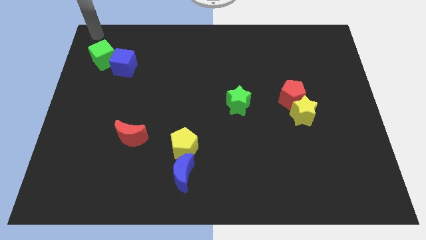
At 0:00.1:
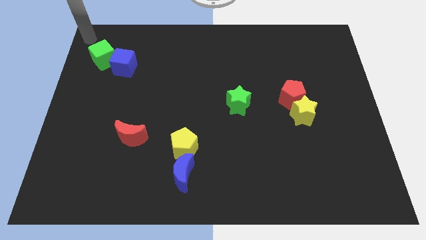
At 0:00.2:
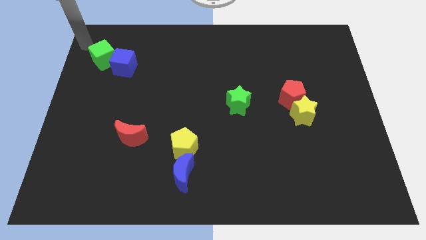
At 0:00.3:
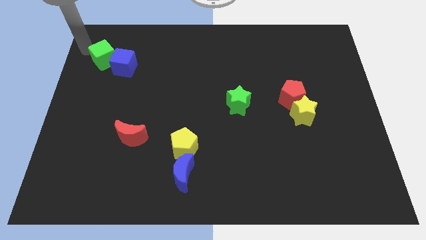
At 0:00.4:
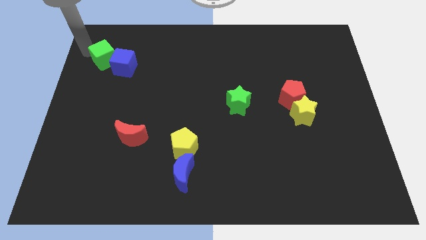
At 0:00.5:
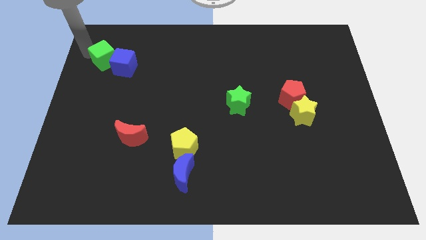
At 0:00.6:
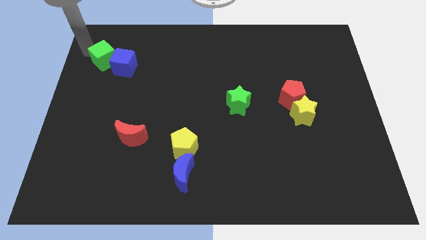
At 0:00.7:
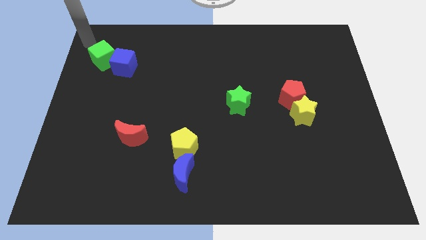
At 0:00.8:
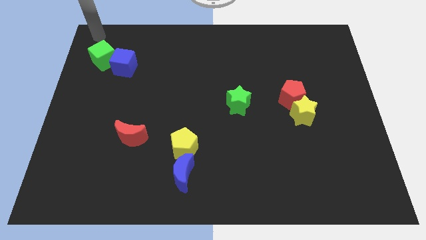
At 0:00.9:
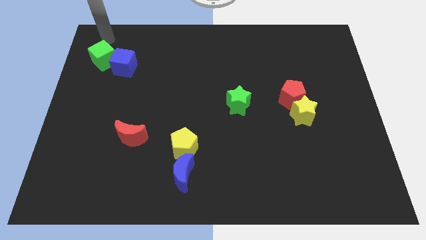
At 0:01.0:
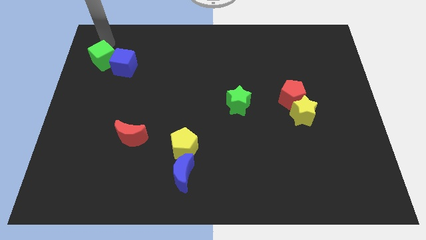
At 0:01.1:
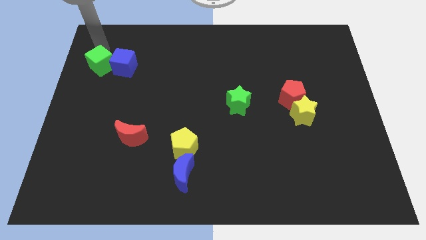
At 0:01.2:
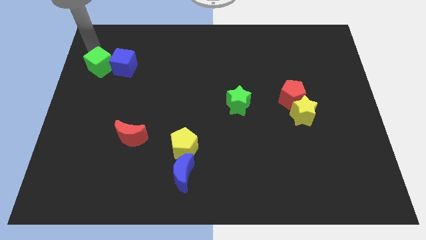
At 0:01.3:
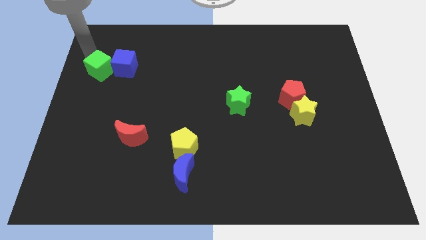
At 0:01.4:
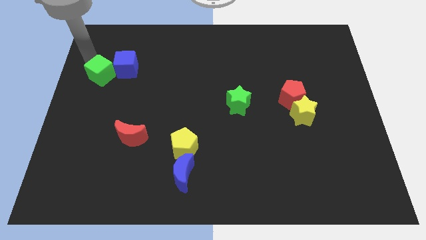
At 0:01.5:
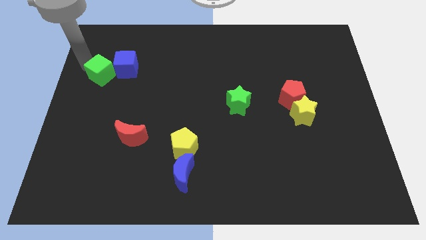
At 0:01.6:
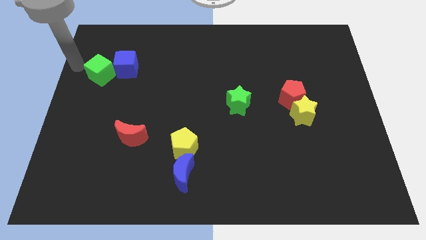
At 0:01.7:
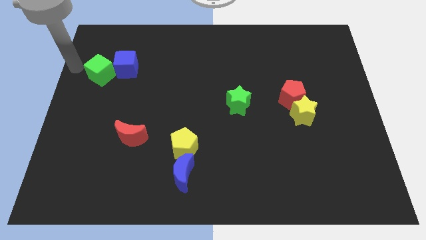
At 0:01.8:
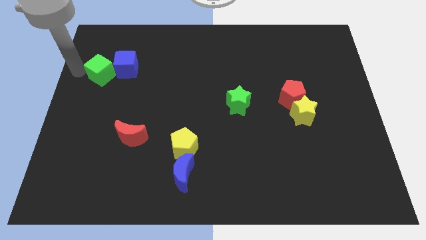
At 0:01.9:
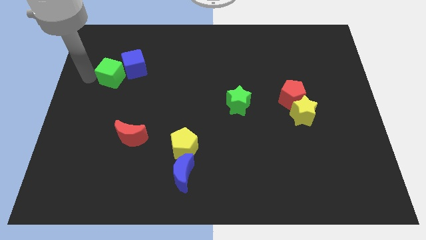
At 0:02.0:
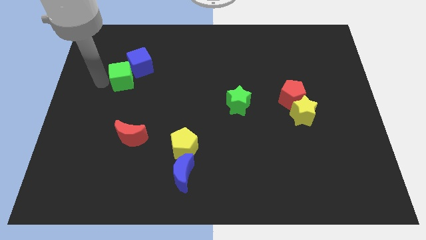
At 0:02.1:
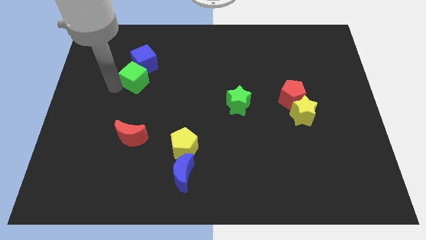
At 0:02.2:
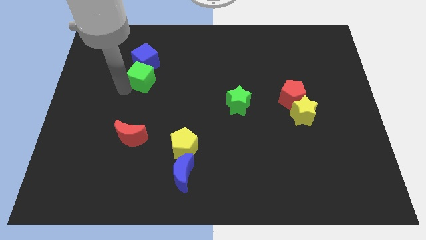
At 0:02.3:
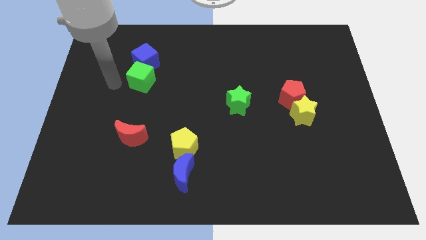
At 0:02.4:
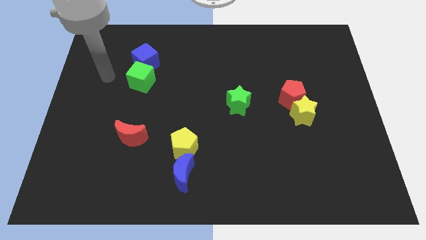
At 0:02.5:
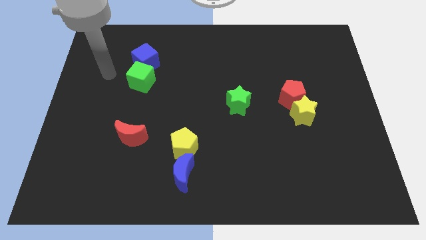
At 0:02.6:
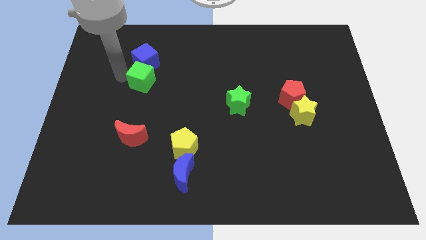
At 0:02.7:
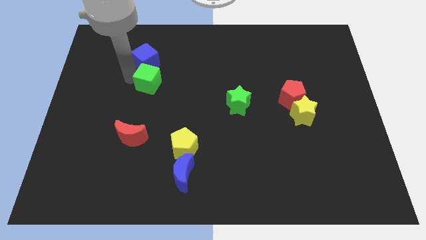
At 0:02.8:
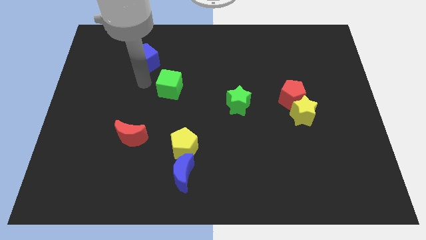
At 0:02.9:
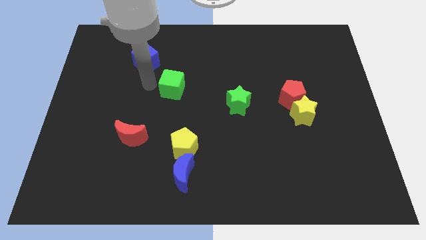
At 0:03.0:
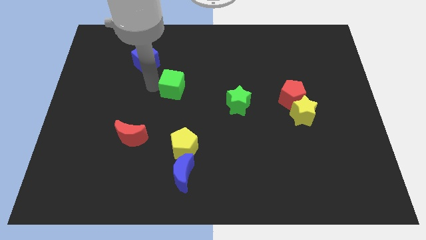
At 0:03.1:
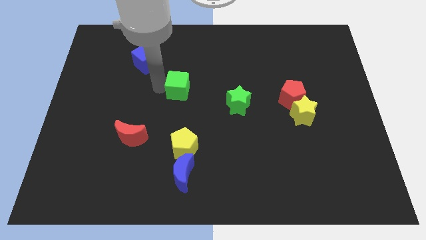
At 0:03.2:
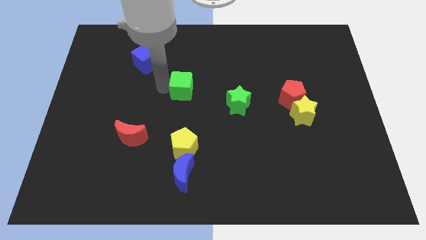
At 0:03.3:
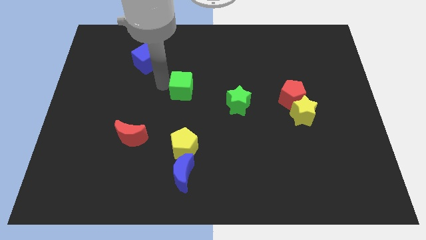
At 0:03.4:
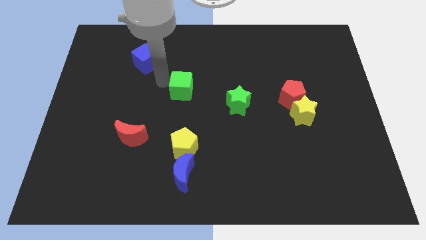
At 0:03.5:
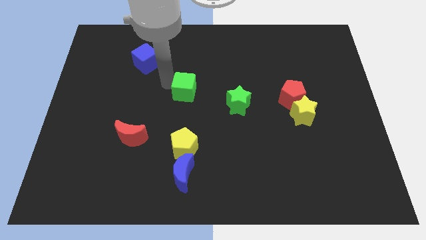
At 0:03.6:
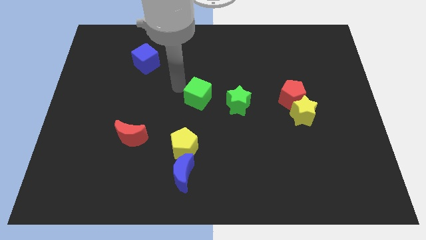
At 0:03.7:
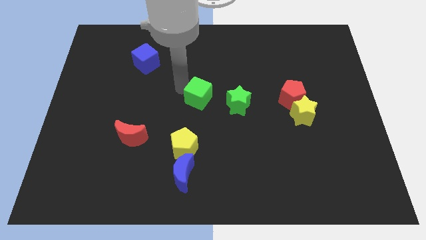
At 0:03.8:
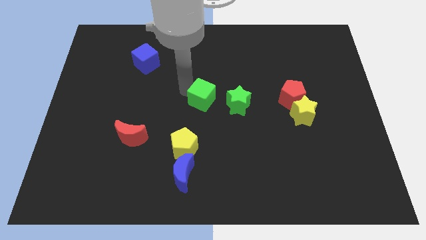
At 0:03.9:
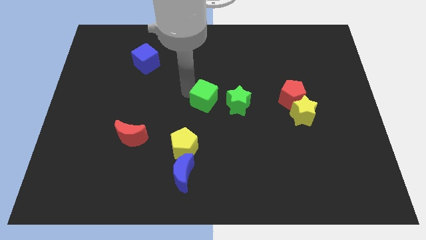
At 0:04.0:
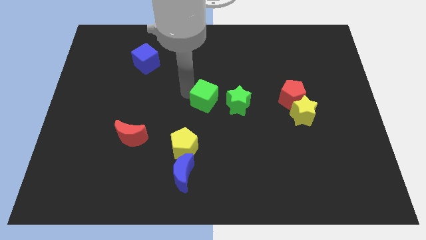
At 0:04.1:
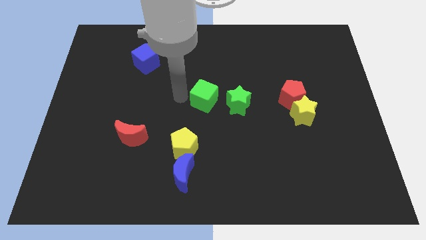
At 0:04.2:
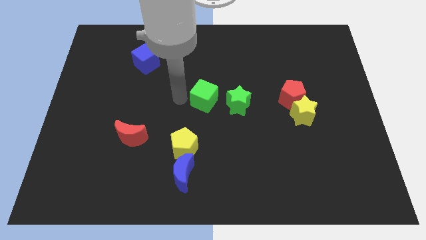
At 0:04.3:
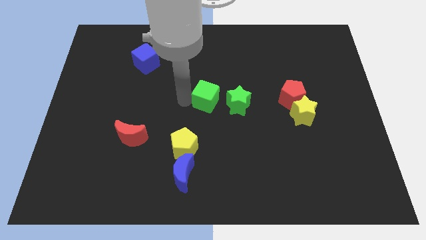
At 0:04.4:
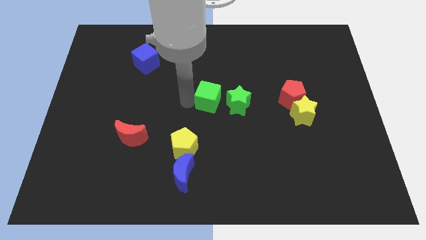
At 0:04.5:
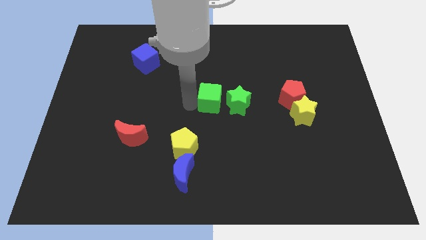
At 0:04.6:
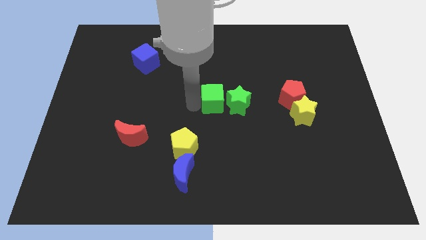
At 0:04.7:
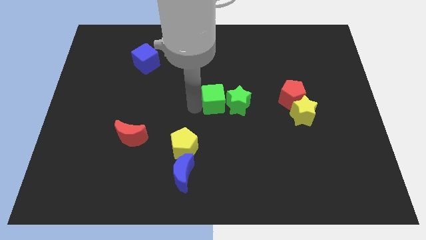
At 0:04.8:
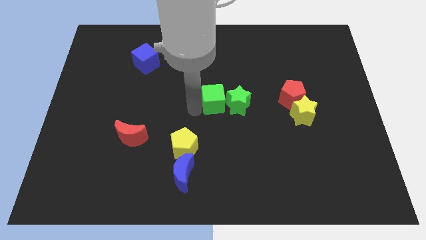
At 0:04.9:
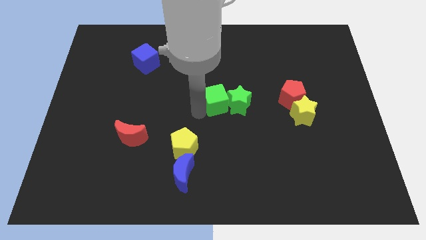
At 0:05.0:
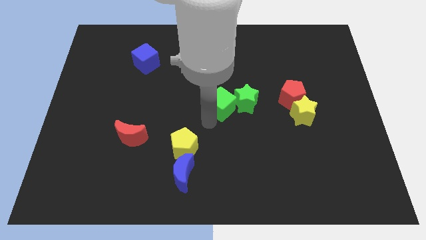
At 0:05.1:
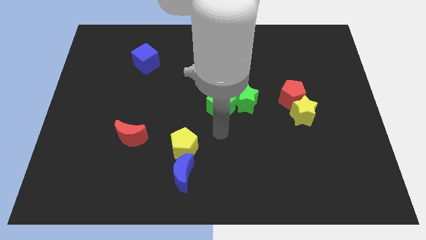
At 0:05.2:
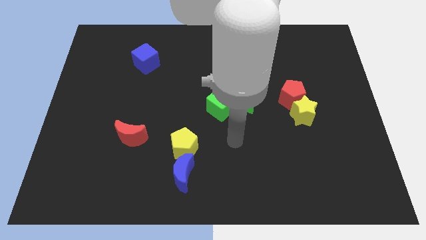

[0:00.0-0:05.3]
push the green cube to the left side of the green star

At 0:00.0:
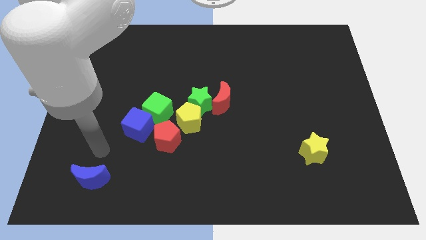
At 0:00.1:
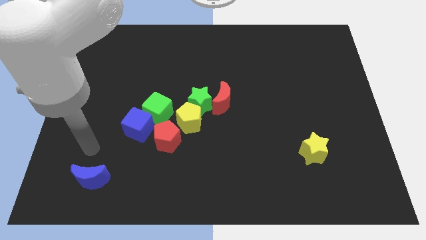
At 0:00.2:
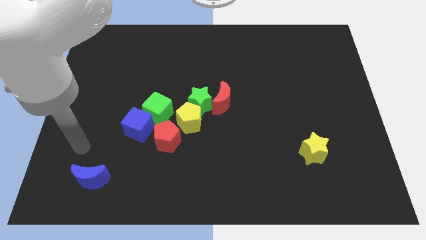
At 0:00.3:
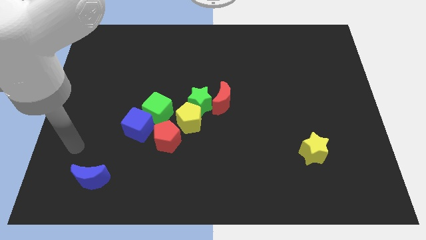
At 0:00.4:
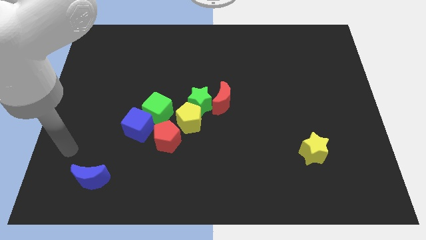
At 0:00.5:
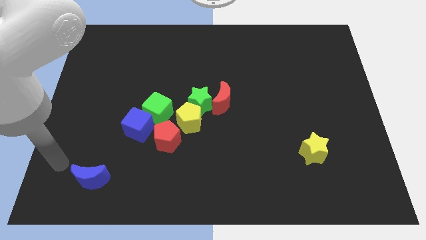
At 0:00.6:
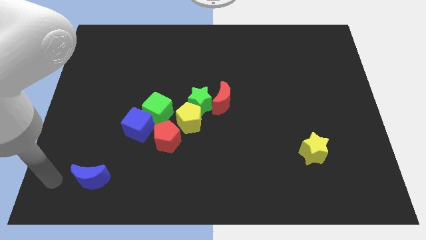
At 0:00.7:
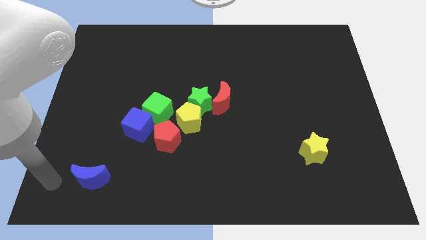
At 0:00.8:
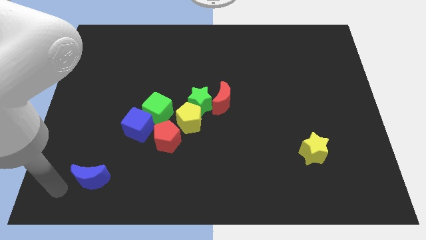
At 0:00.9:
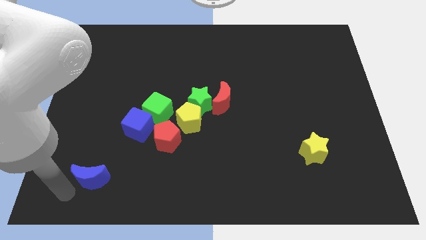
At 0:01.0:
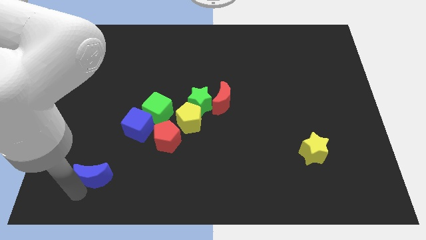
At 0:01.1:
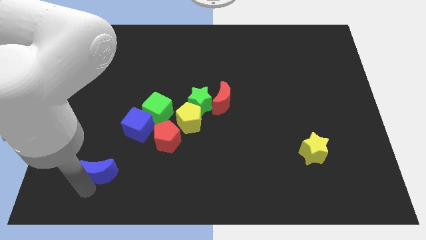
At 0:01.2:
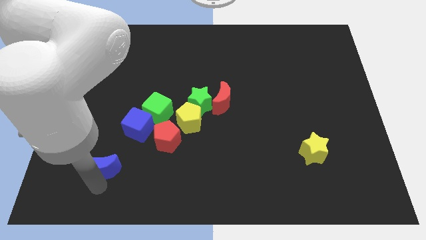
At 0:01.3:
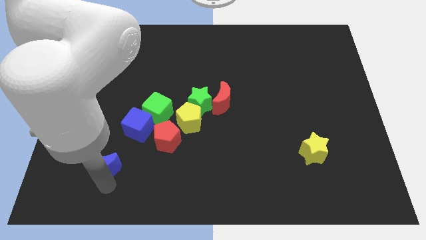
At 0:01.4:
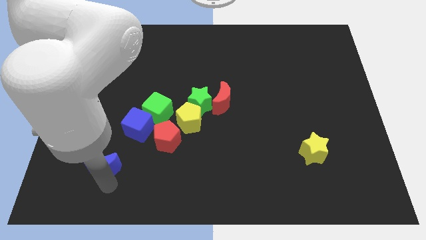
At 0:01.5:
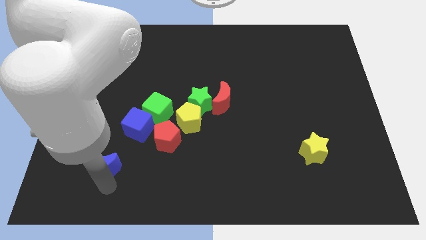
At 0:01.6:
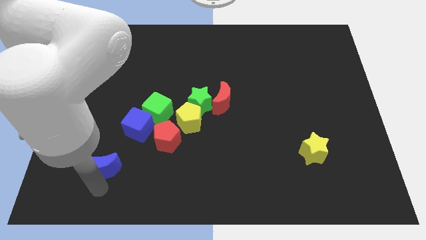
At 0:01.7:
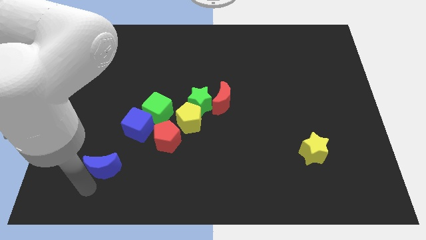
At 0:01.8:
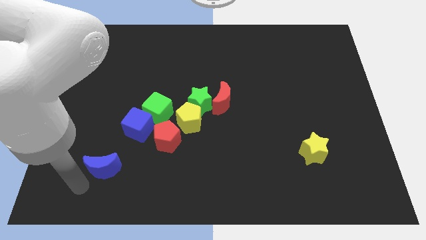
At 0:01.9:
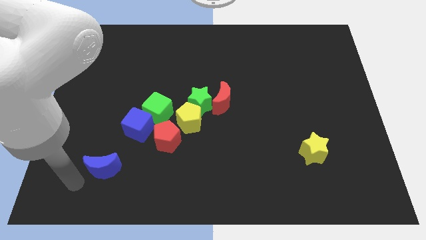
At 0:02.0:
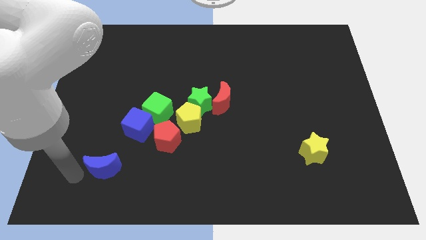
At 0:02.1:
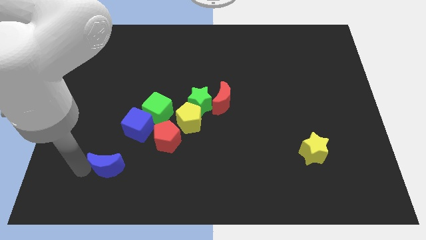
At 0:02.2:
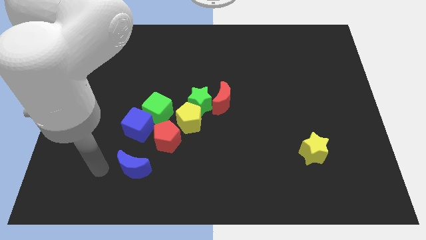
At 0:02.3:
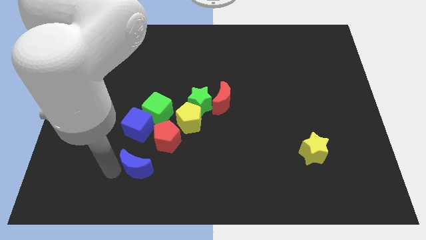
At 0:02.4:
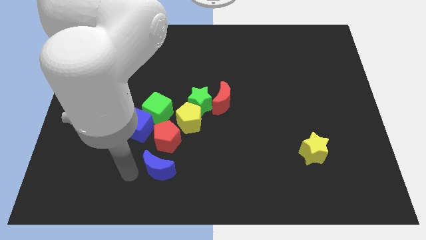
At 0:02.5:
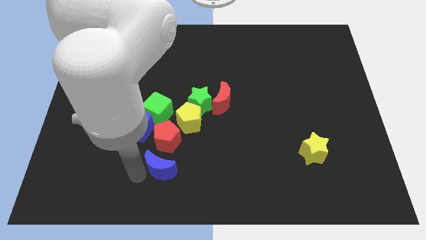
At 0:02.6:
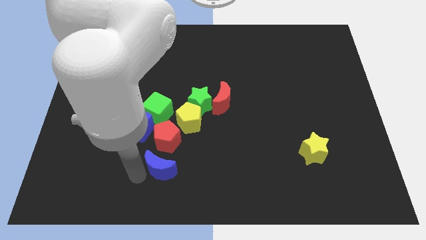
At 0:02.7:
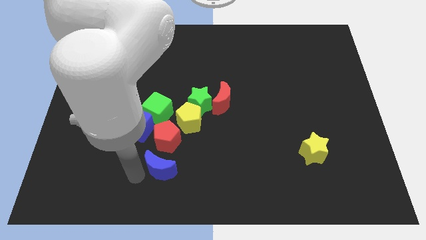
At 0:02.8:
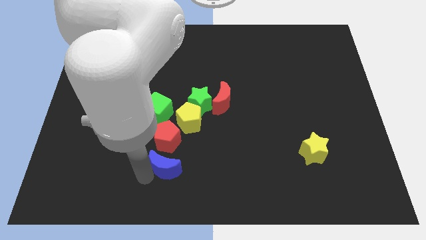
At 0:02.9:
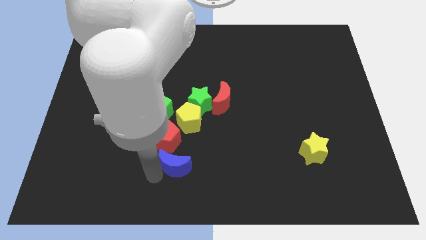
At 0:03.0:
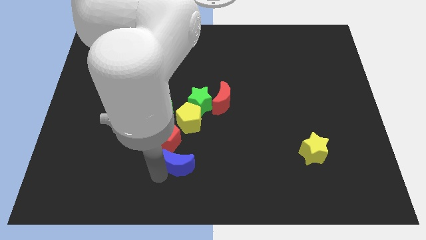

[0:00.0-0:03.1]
push the blue moon to the bottom side of the red pentagon

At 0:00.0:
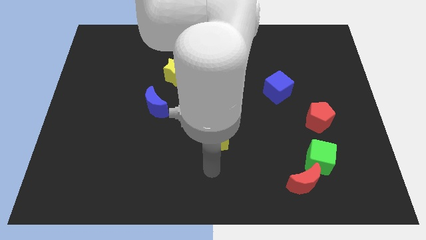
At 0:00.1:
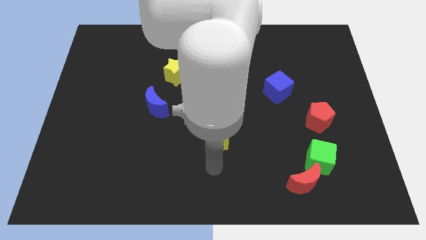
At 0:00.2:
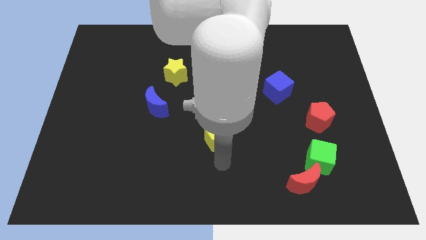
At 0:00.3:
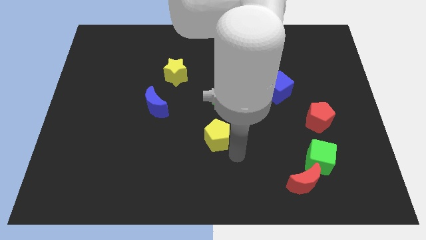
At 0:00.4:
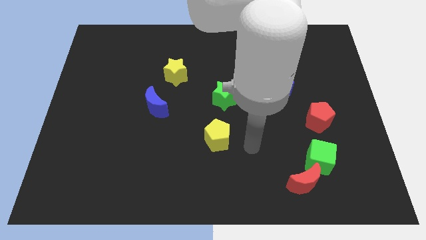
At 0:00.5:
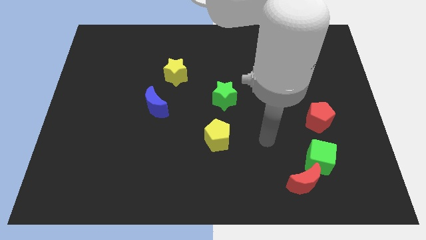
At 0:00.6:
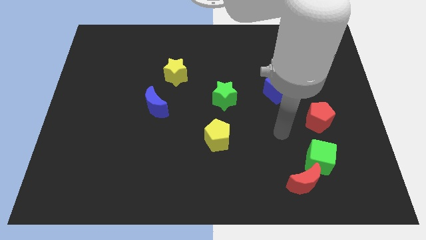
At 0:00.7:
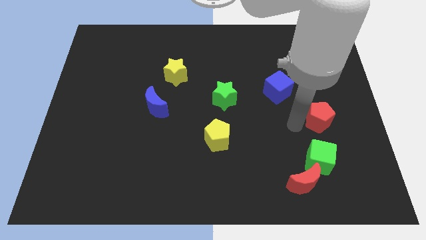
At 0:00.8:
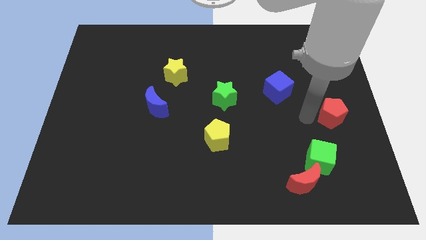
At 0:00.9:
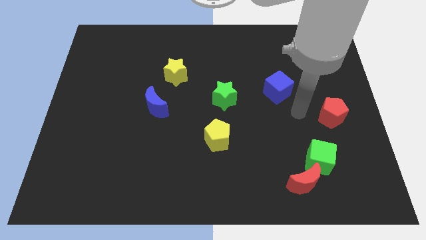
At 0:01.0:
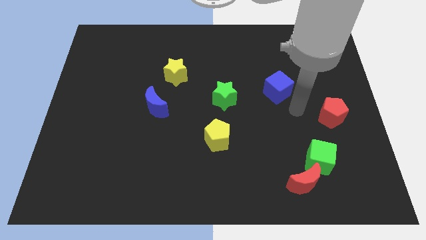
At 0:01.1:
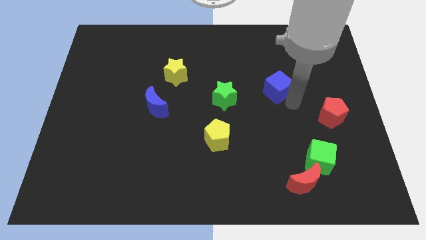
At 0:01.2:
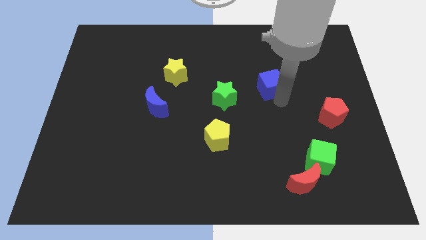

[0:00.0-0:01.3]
move red pentagon to the right of the board
